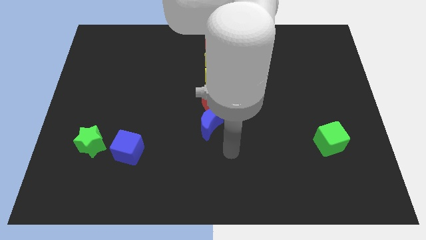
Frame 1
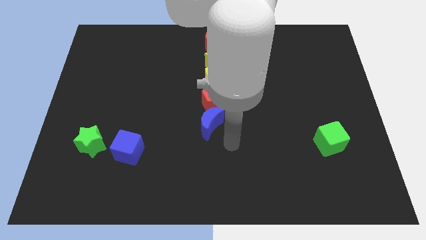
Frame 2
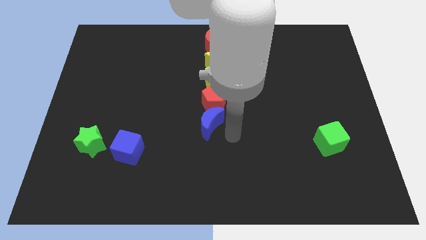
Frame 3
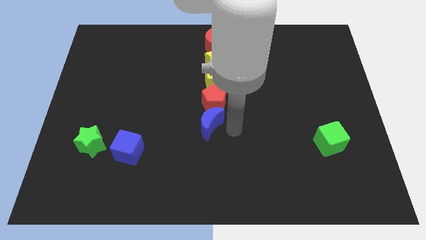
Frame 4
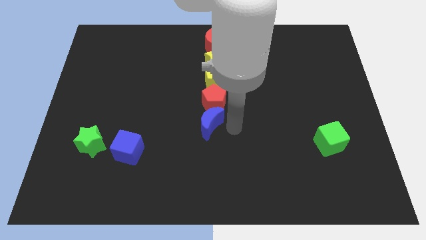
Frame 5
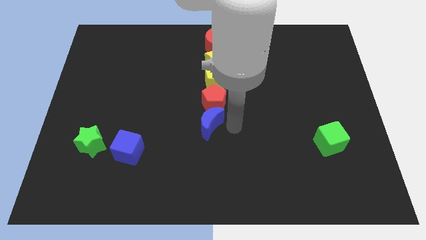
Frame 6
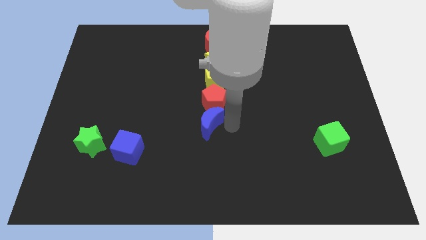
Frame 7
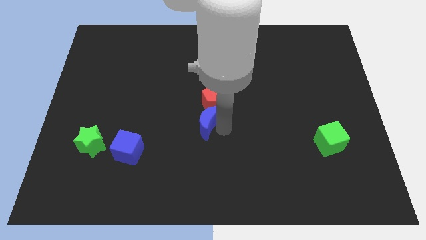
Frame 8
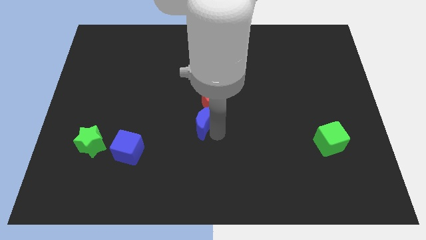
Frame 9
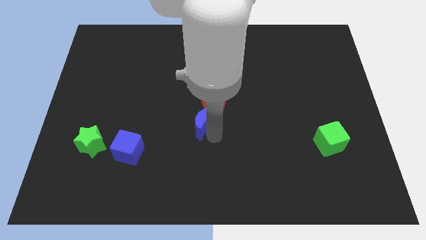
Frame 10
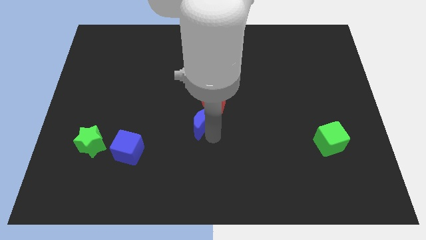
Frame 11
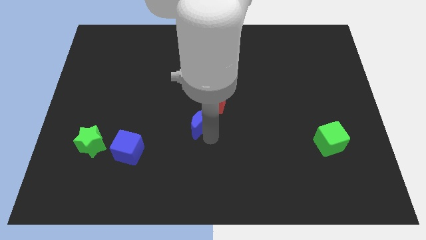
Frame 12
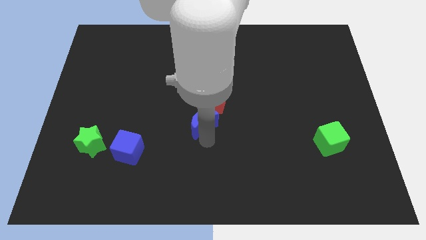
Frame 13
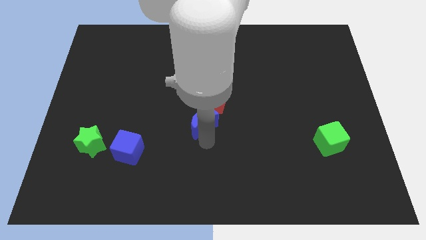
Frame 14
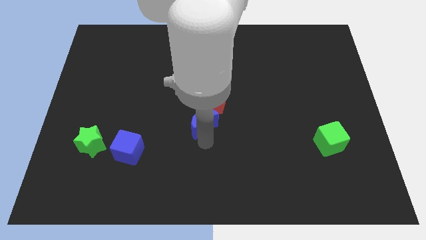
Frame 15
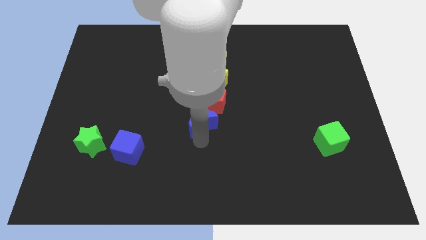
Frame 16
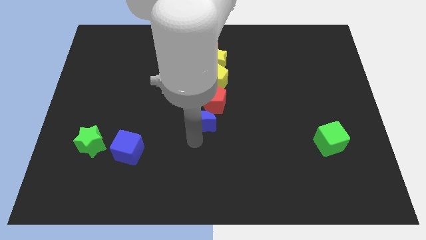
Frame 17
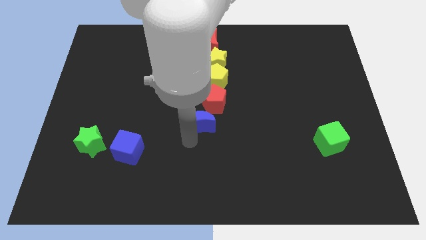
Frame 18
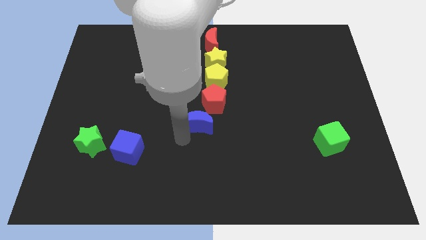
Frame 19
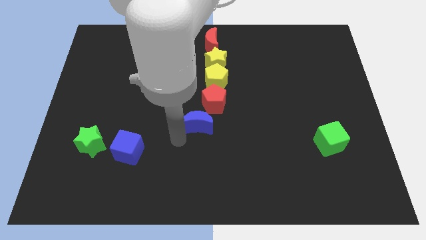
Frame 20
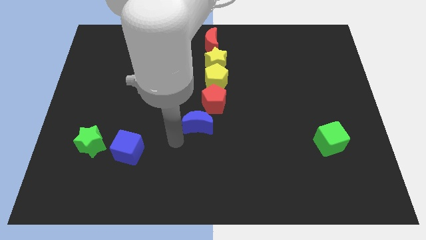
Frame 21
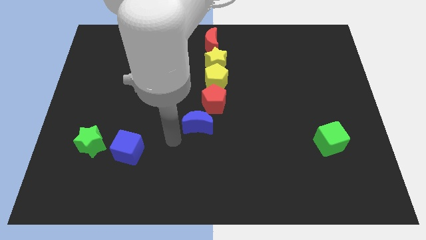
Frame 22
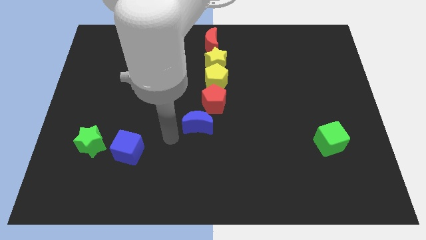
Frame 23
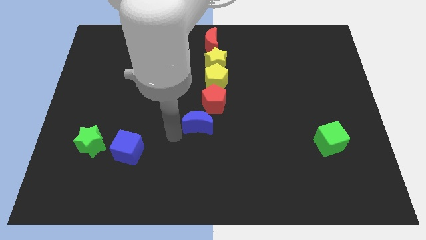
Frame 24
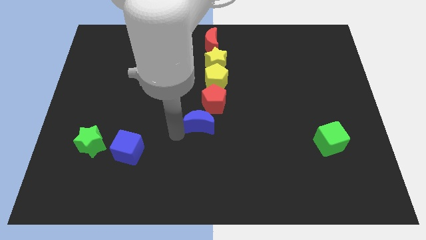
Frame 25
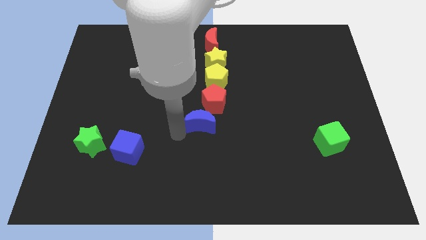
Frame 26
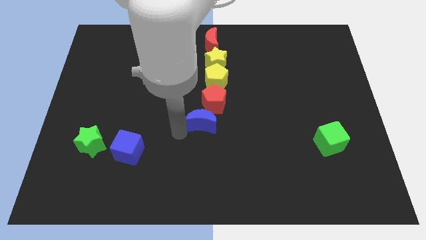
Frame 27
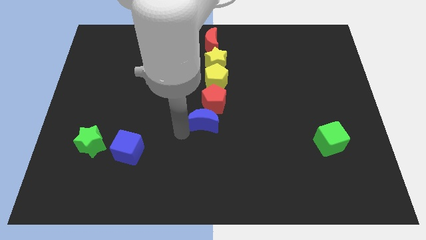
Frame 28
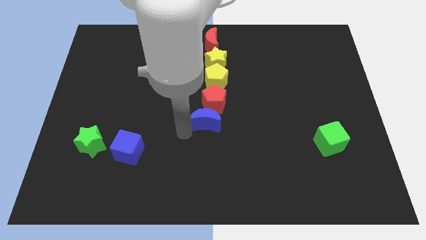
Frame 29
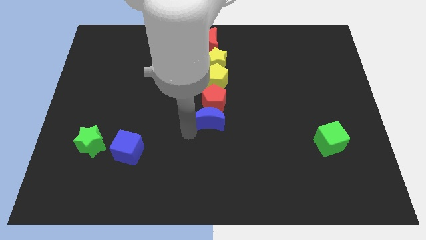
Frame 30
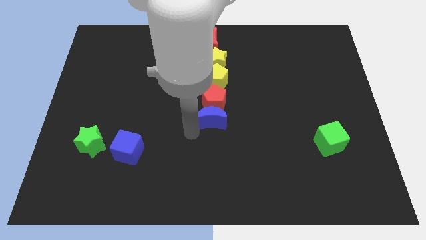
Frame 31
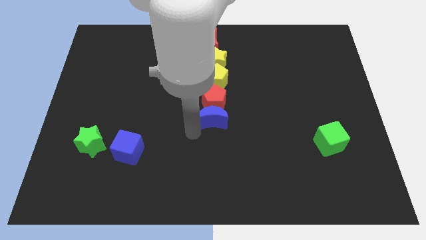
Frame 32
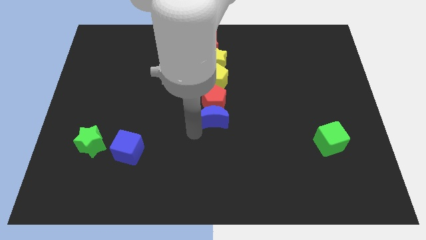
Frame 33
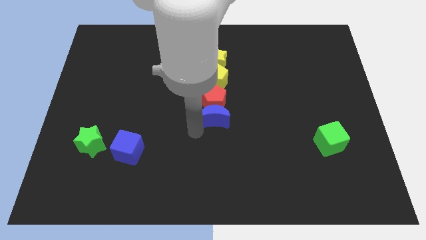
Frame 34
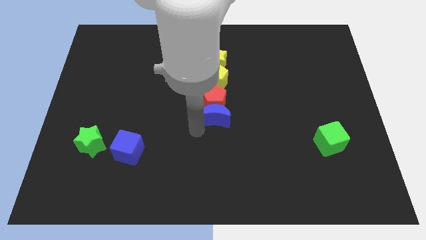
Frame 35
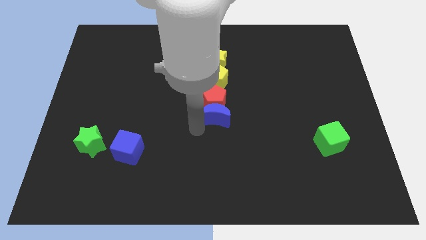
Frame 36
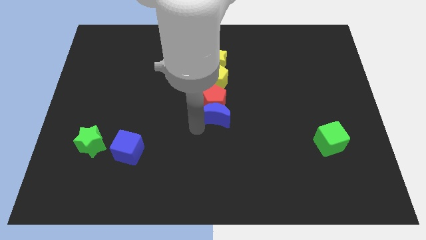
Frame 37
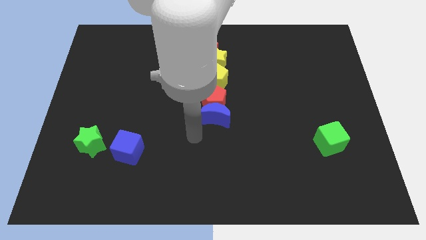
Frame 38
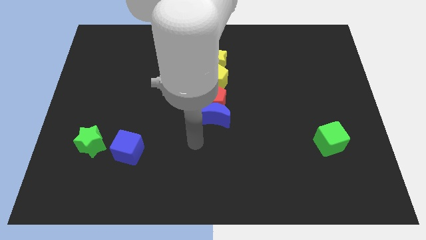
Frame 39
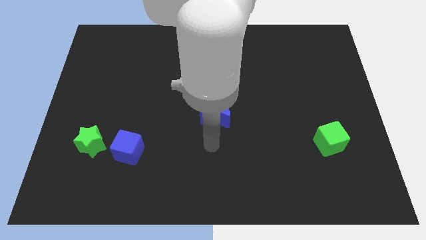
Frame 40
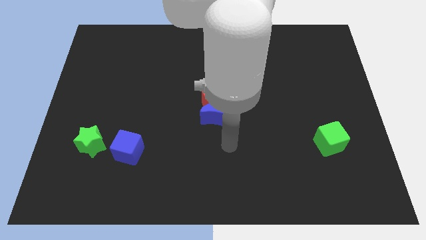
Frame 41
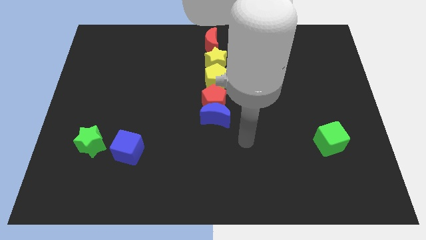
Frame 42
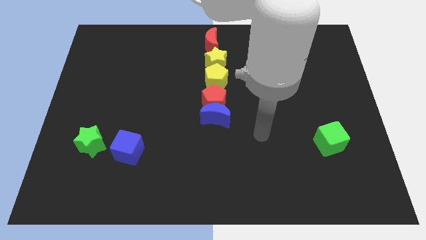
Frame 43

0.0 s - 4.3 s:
adjust the blue moon

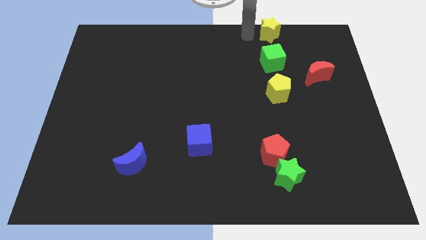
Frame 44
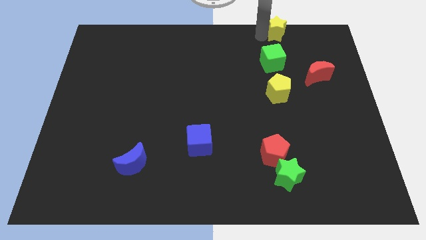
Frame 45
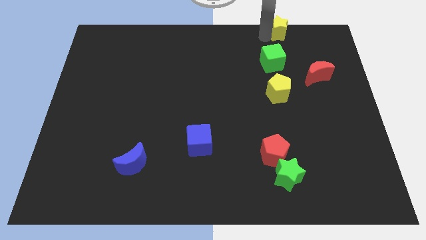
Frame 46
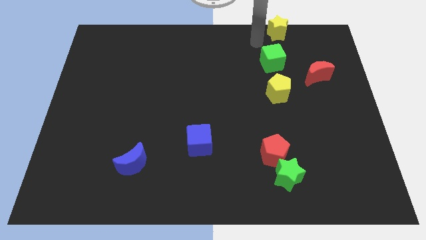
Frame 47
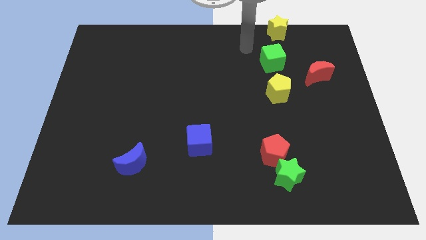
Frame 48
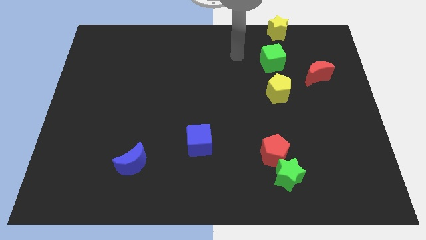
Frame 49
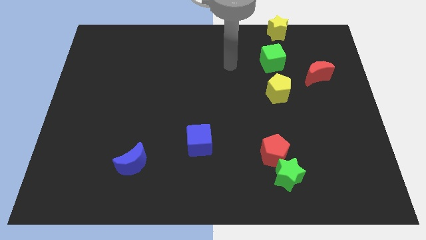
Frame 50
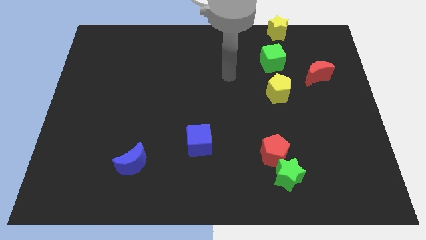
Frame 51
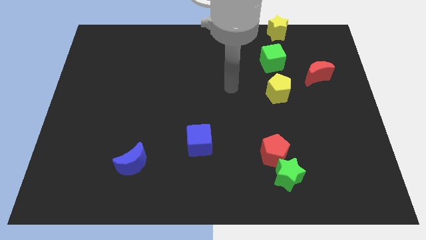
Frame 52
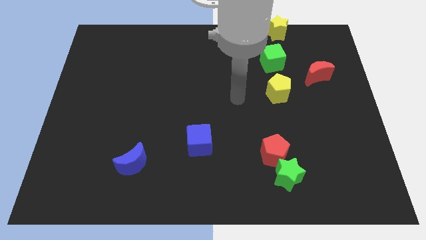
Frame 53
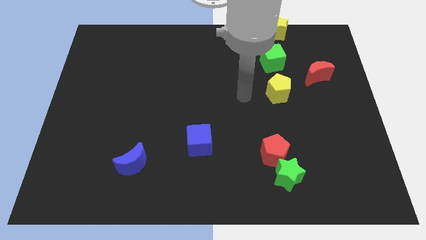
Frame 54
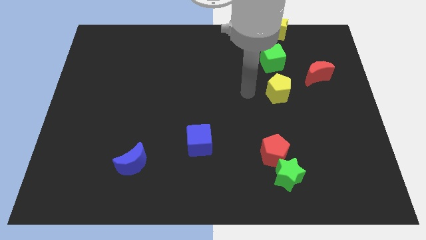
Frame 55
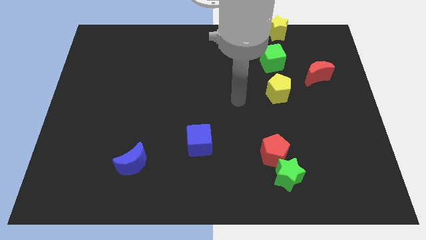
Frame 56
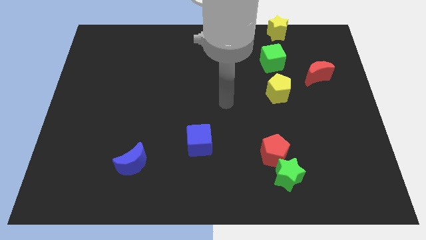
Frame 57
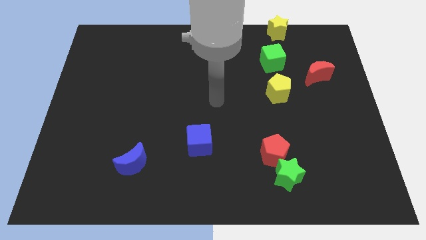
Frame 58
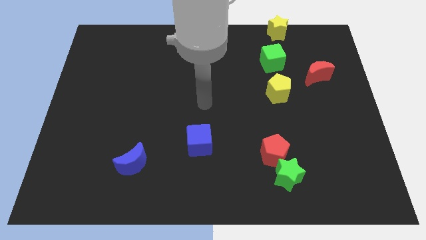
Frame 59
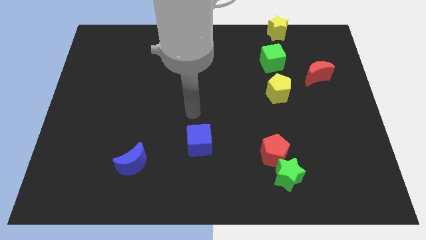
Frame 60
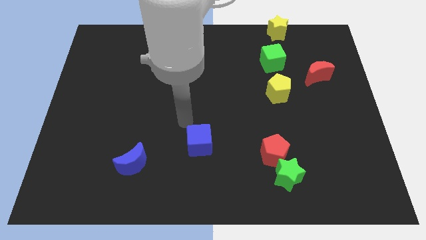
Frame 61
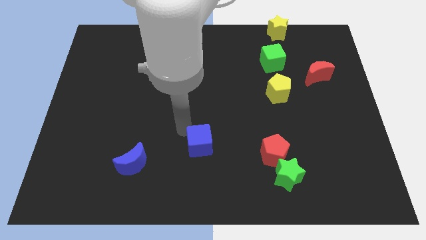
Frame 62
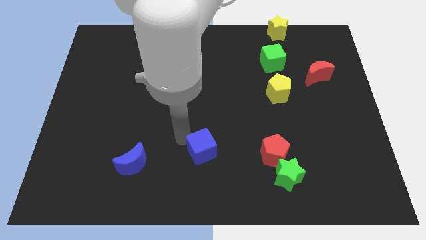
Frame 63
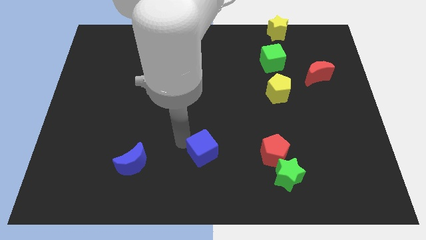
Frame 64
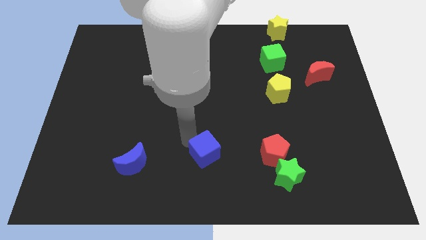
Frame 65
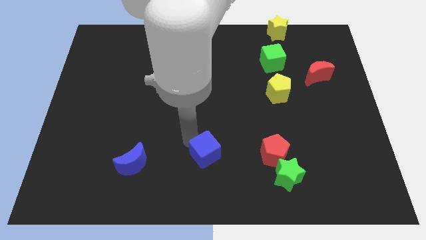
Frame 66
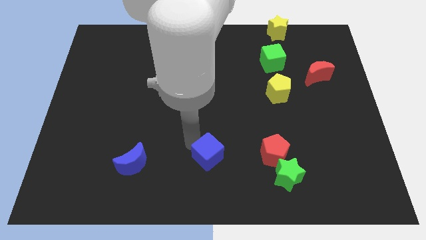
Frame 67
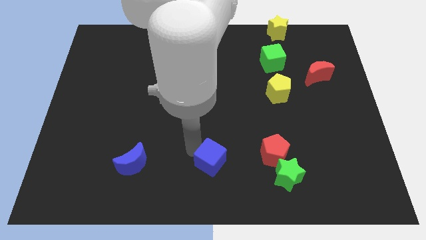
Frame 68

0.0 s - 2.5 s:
push the blue cube between the blue moon and red pentagon

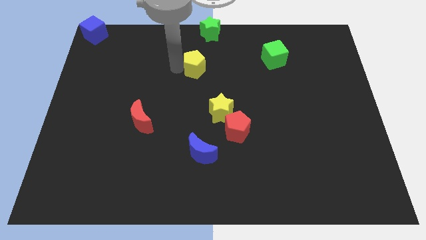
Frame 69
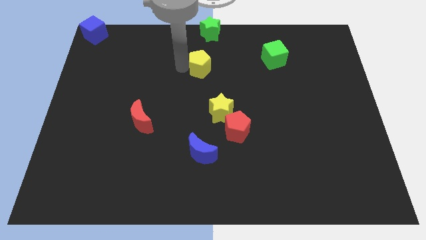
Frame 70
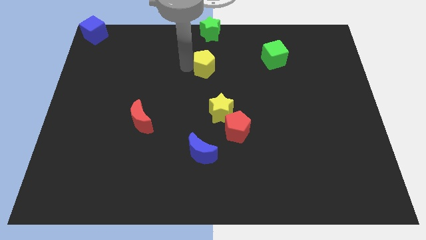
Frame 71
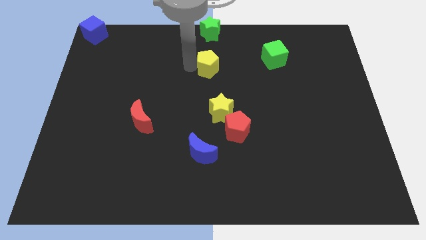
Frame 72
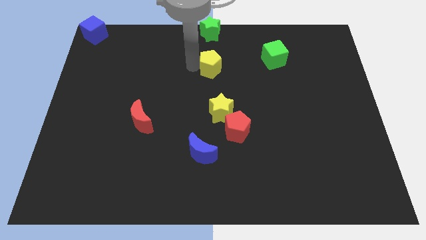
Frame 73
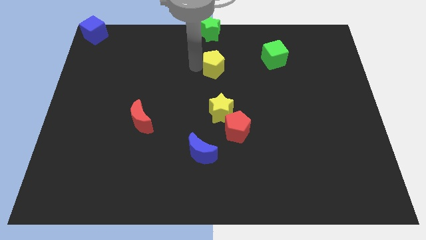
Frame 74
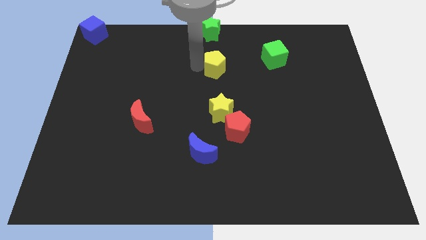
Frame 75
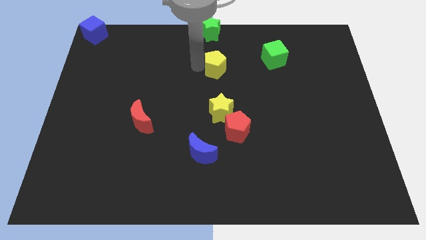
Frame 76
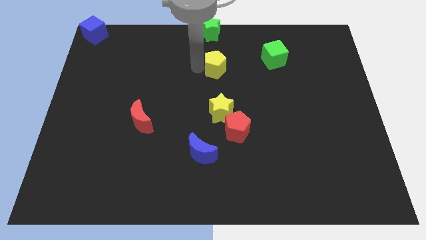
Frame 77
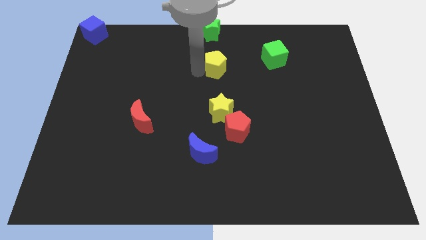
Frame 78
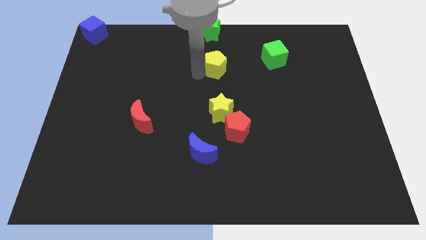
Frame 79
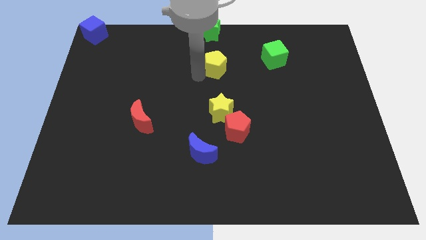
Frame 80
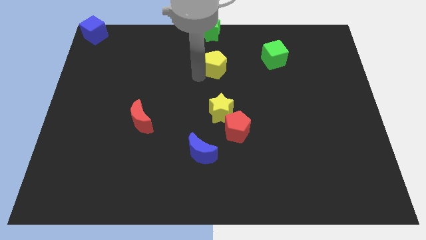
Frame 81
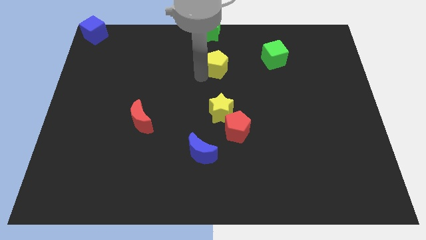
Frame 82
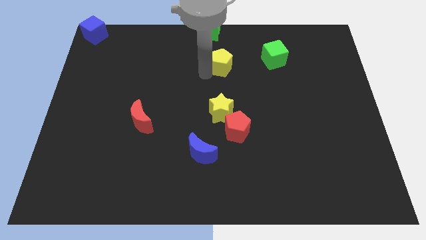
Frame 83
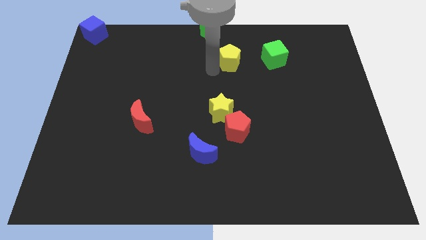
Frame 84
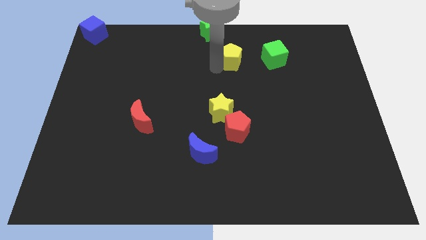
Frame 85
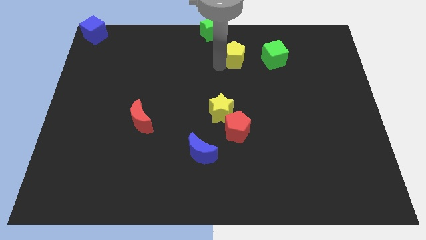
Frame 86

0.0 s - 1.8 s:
place the yellow pentagon left of green cube

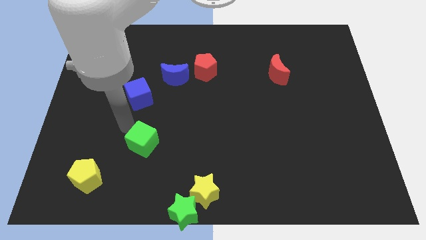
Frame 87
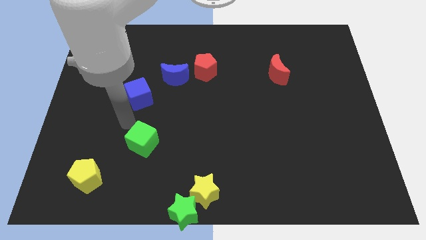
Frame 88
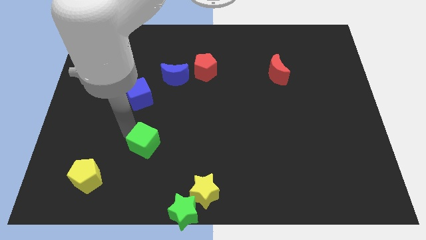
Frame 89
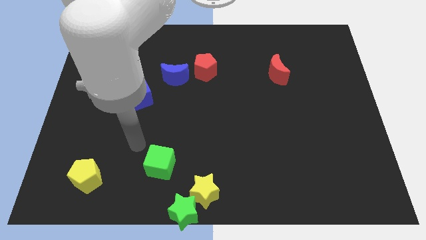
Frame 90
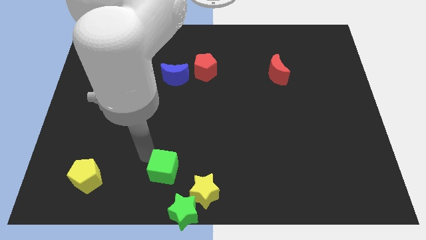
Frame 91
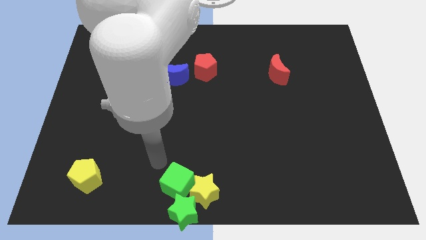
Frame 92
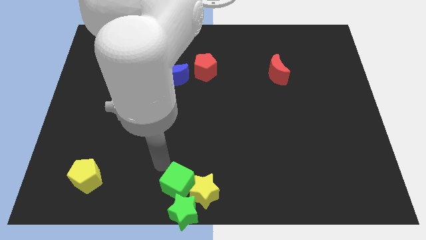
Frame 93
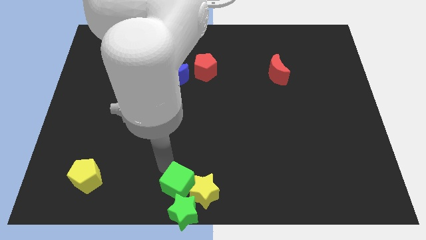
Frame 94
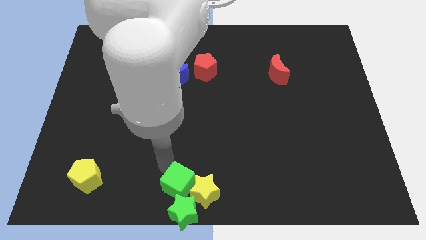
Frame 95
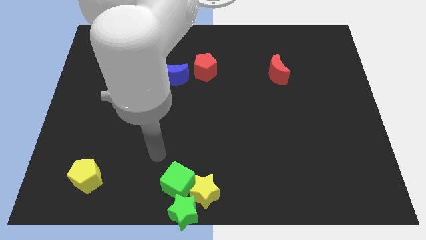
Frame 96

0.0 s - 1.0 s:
push the green cube into the group of stars
